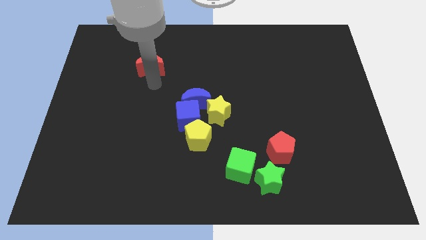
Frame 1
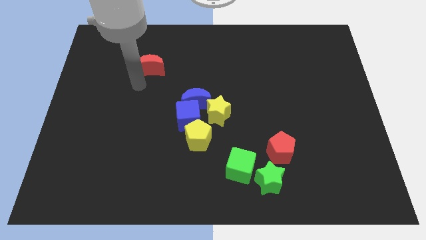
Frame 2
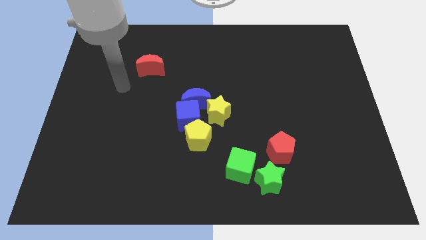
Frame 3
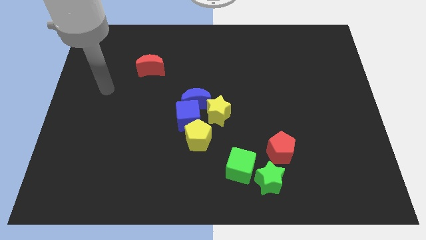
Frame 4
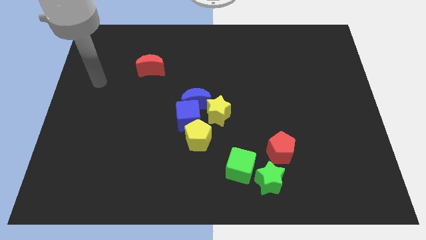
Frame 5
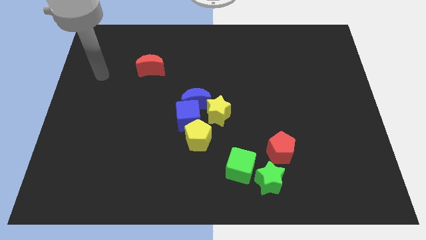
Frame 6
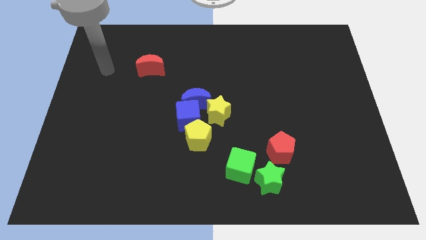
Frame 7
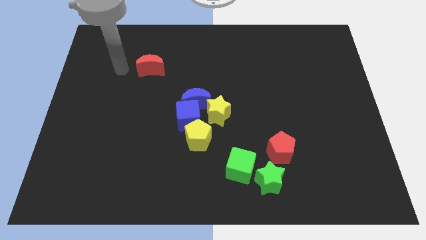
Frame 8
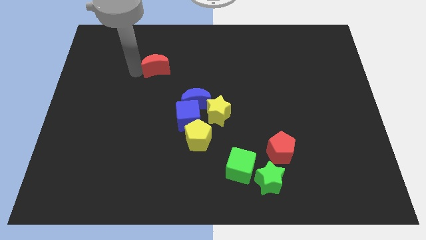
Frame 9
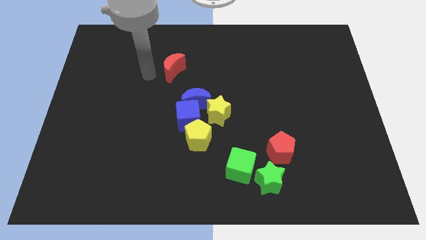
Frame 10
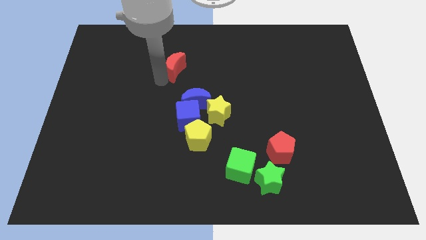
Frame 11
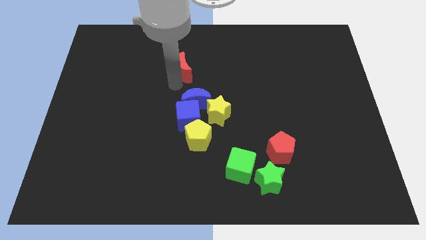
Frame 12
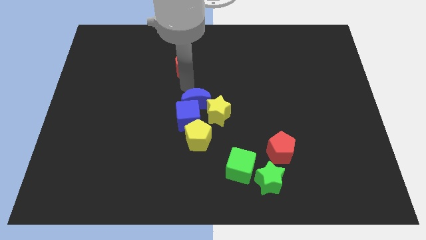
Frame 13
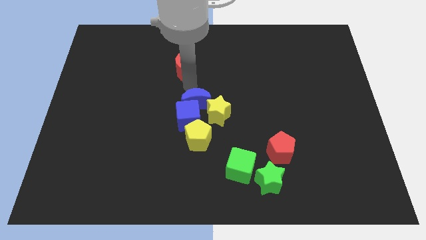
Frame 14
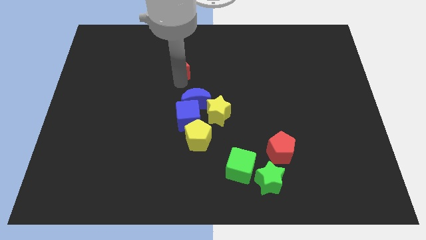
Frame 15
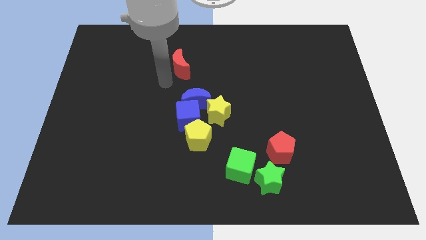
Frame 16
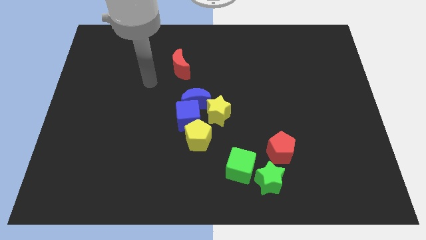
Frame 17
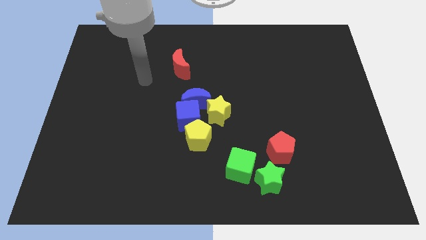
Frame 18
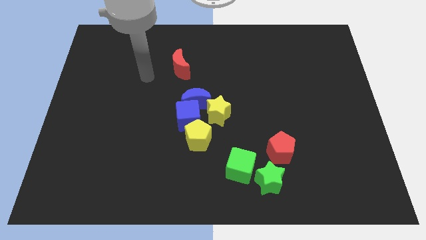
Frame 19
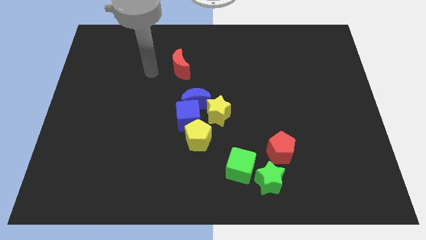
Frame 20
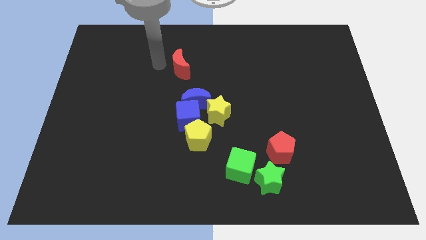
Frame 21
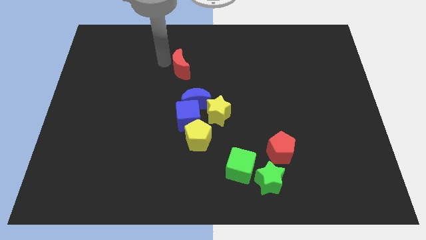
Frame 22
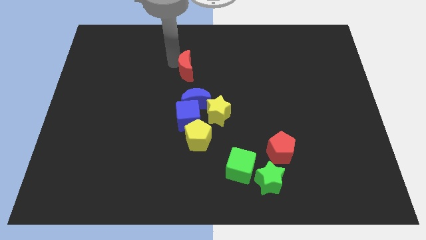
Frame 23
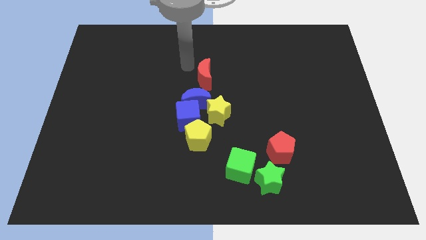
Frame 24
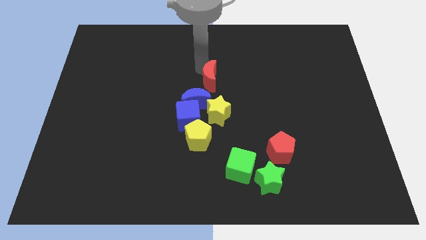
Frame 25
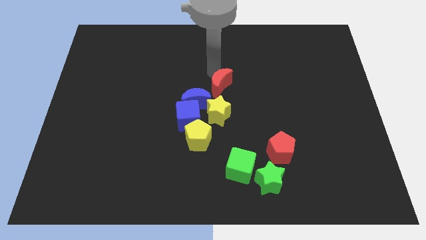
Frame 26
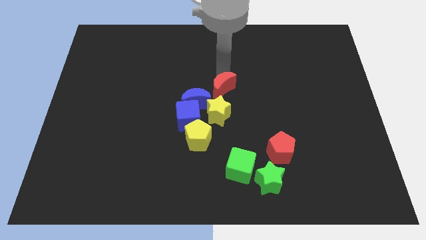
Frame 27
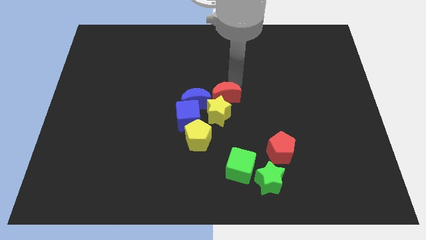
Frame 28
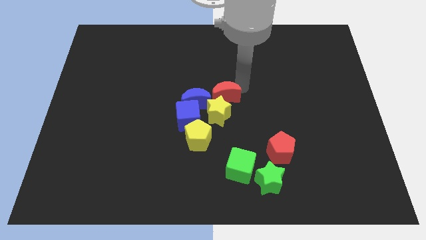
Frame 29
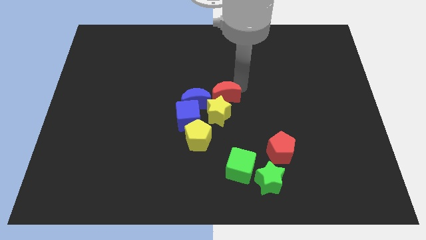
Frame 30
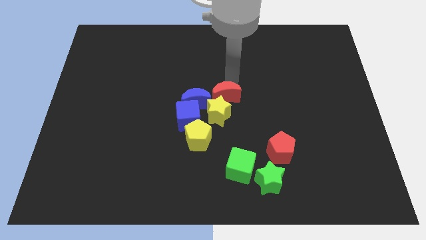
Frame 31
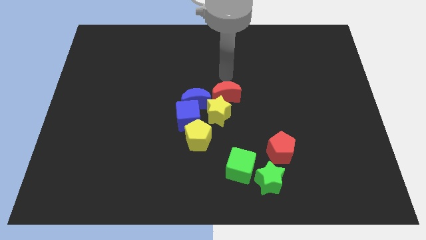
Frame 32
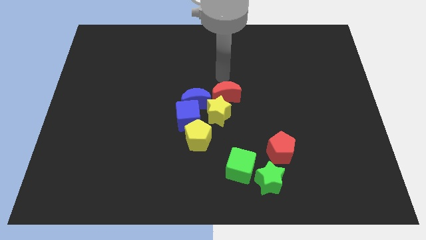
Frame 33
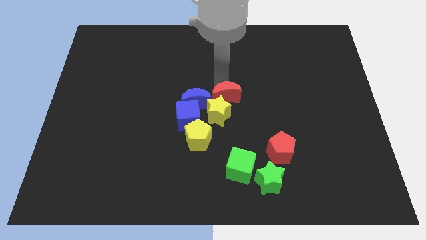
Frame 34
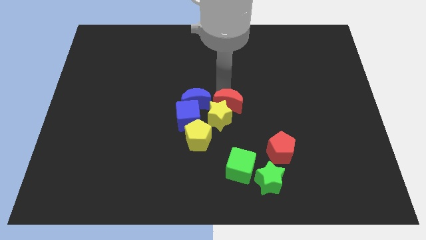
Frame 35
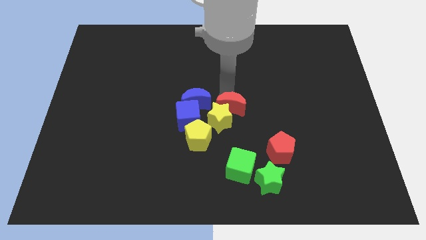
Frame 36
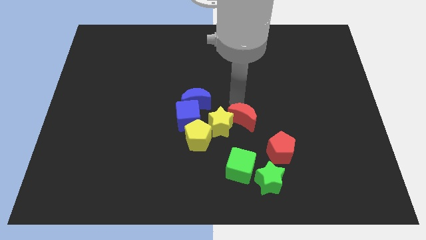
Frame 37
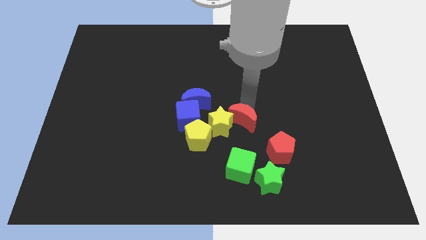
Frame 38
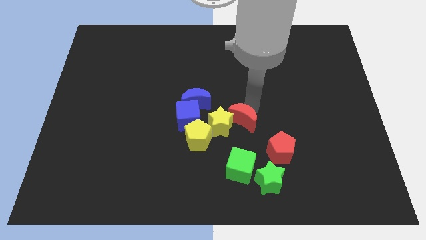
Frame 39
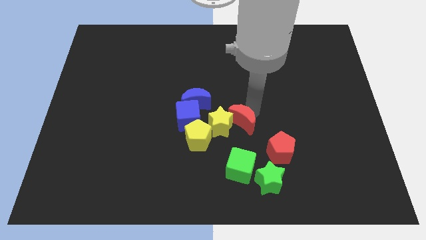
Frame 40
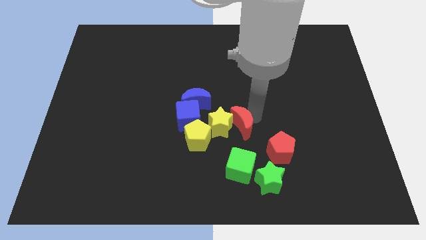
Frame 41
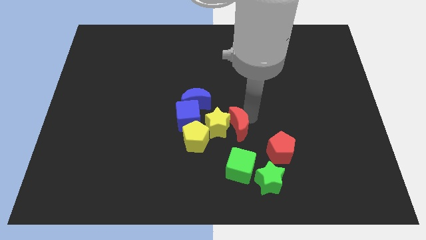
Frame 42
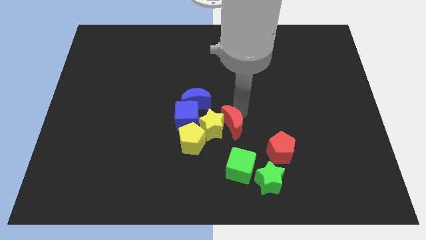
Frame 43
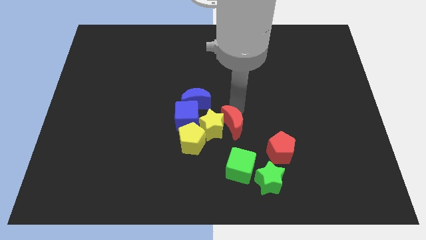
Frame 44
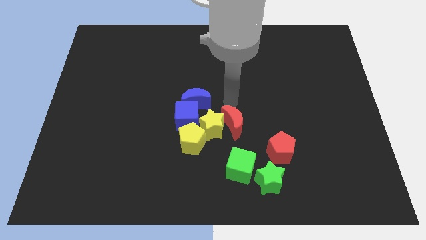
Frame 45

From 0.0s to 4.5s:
put the red moon into the yellow star

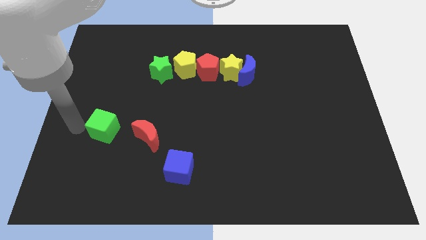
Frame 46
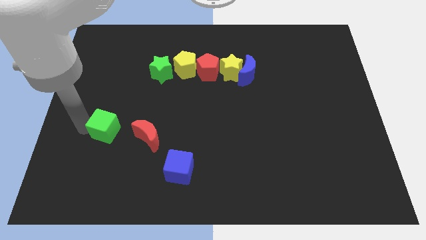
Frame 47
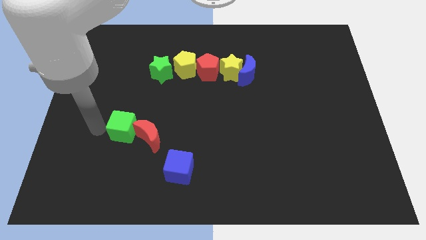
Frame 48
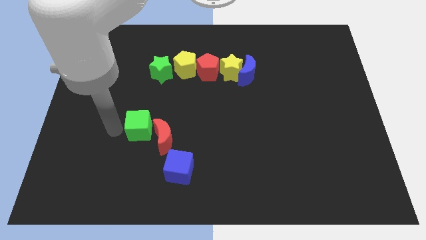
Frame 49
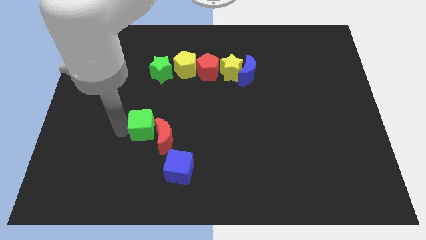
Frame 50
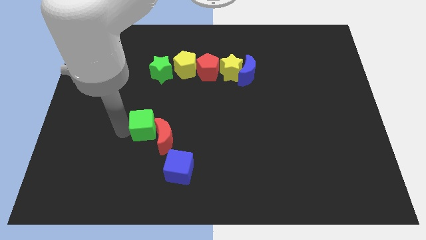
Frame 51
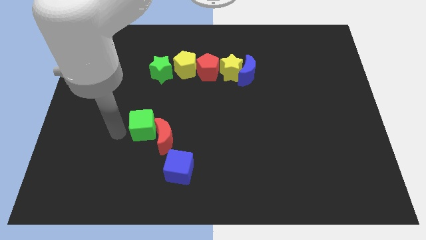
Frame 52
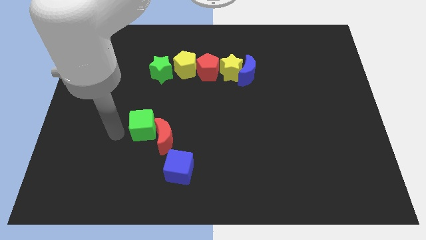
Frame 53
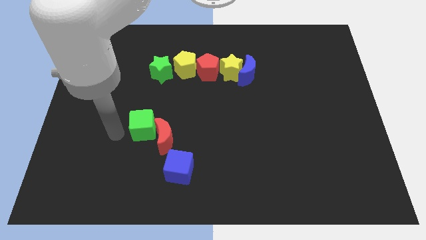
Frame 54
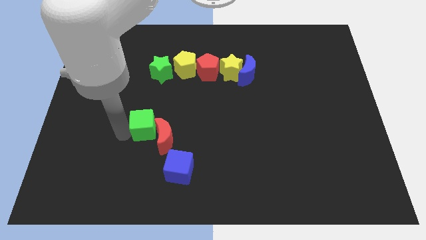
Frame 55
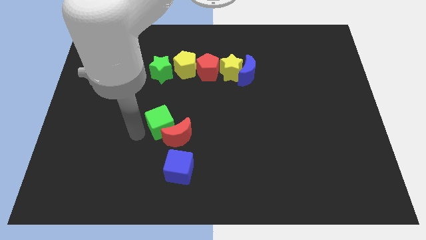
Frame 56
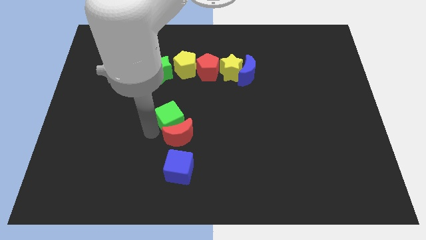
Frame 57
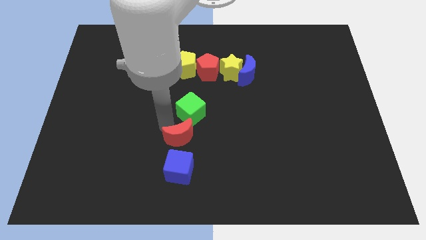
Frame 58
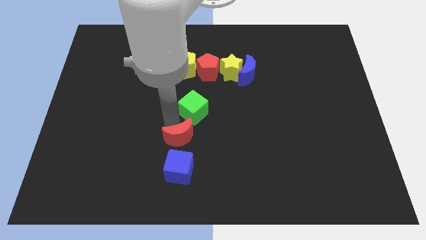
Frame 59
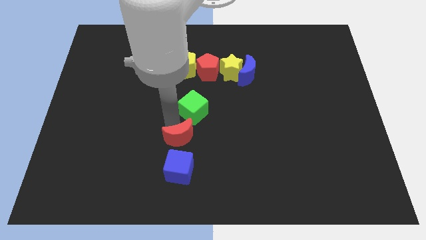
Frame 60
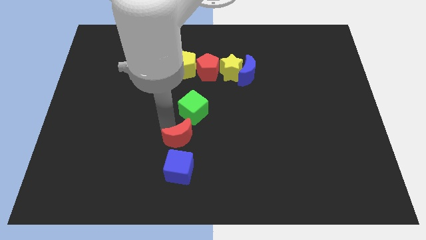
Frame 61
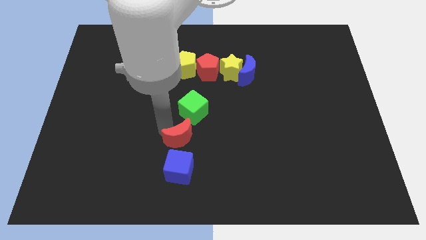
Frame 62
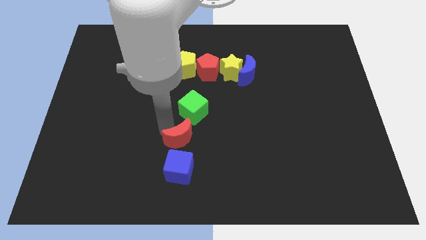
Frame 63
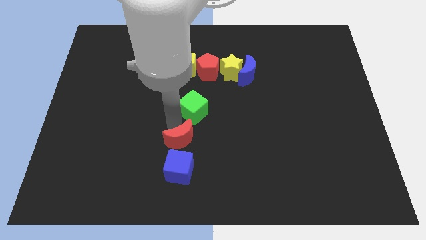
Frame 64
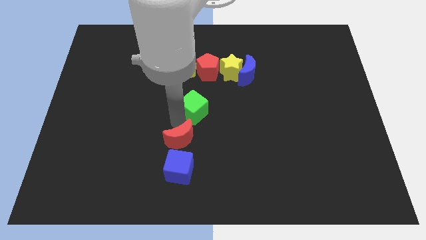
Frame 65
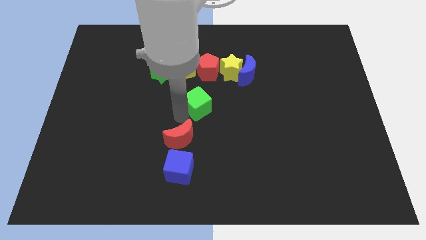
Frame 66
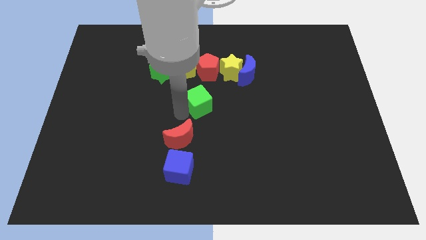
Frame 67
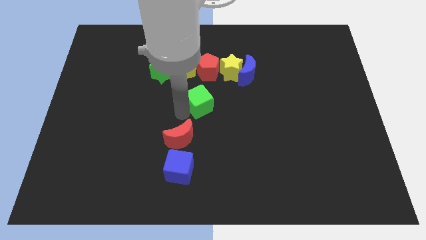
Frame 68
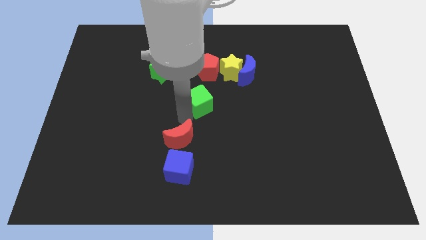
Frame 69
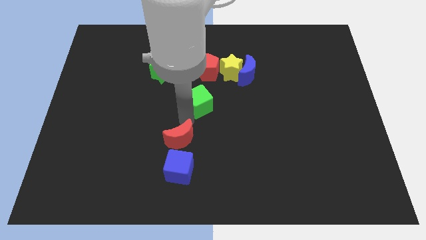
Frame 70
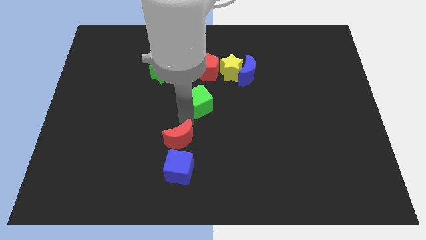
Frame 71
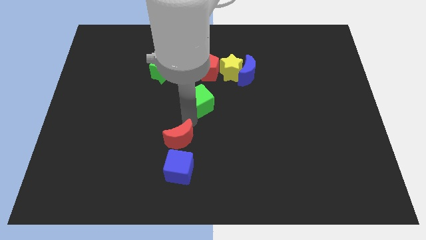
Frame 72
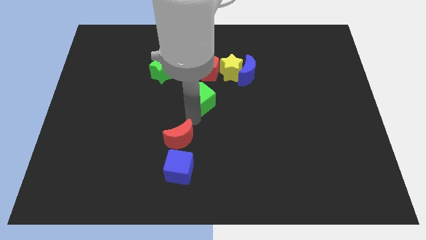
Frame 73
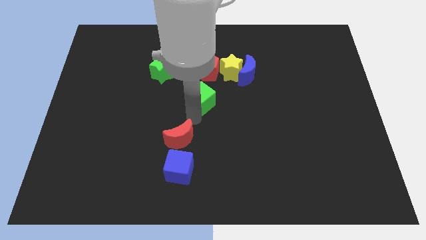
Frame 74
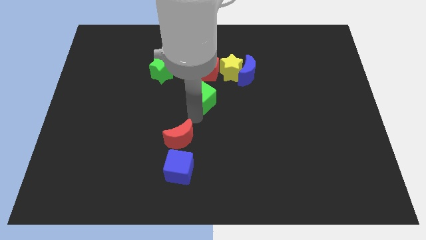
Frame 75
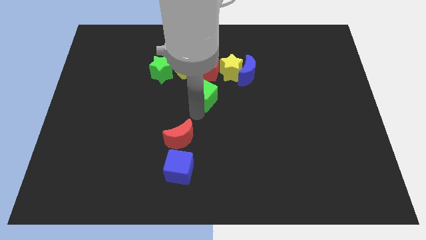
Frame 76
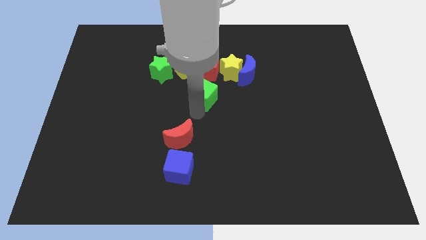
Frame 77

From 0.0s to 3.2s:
push the green cube below the red pentagon

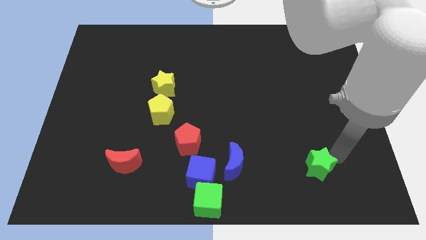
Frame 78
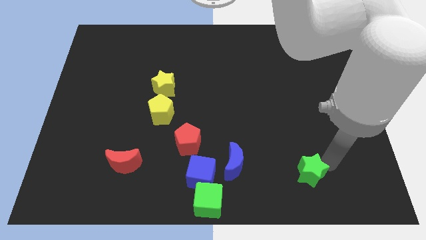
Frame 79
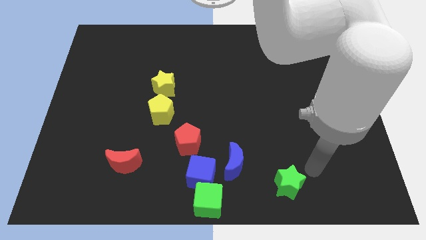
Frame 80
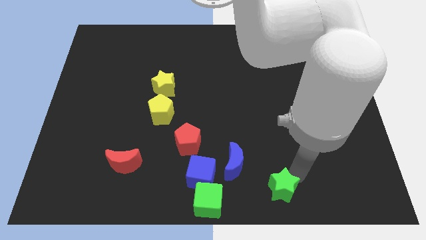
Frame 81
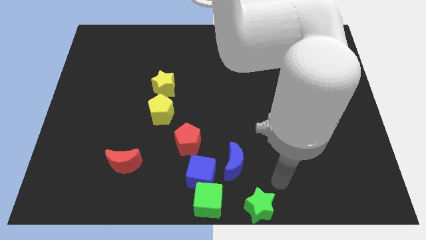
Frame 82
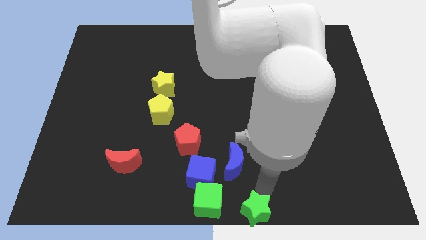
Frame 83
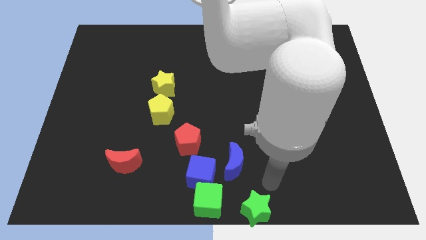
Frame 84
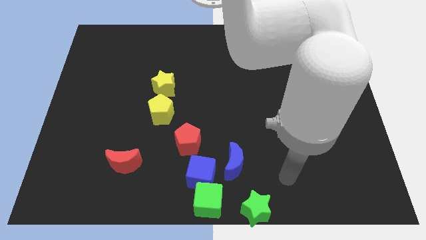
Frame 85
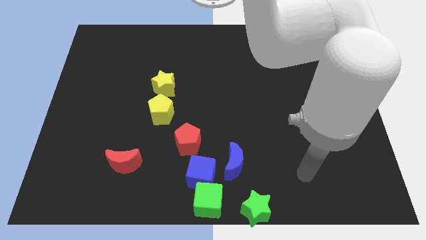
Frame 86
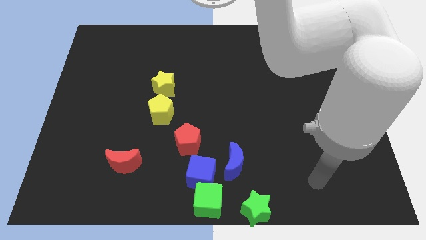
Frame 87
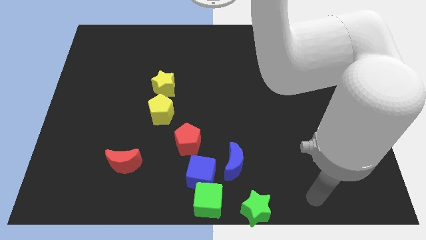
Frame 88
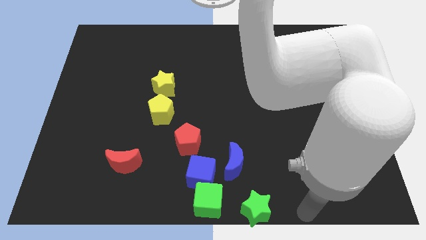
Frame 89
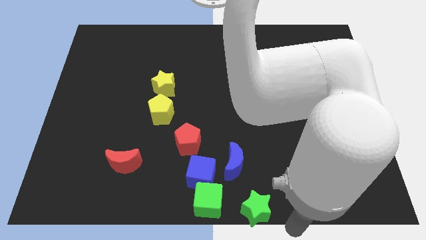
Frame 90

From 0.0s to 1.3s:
move the green star to the right of the green cube

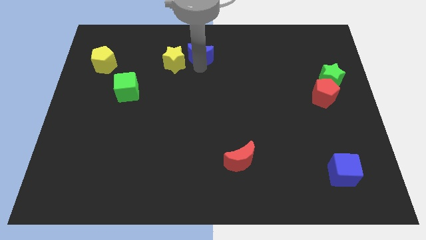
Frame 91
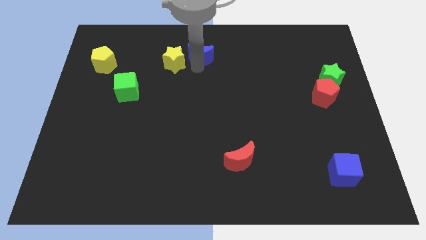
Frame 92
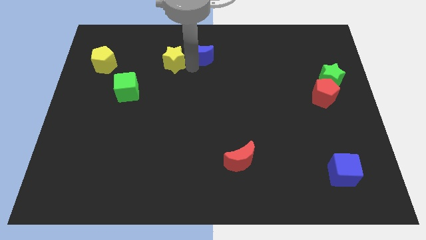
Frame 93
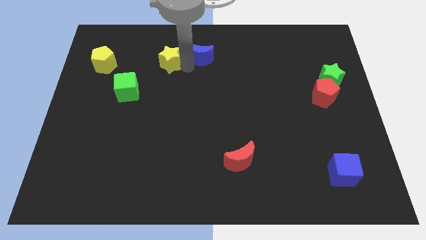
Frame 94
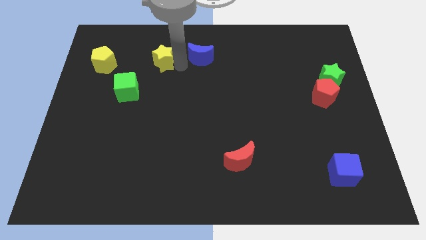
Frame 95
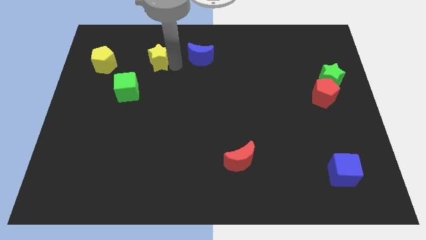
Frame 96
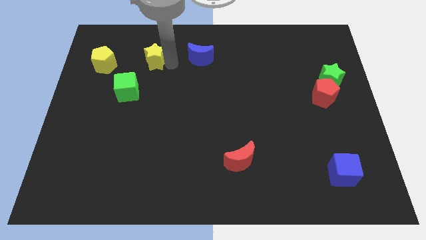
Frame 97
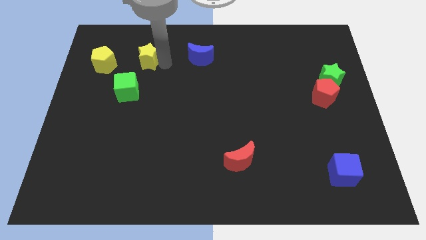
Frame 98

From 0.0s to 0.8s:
move yellow star towards yellow pentagon
